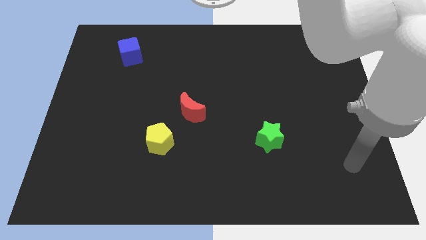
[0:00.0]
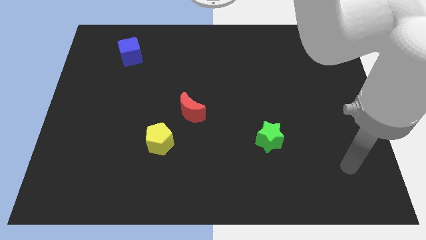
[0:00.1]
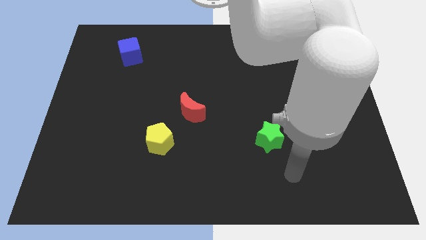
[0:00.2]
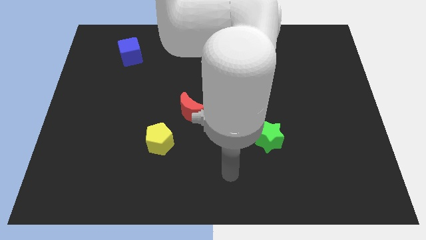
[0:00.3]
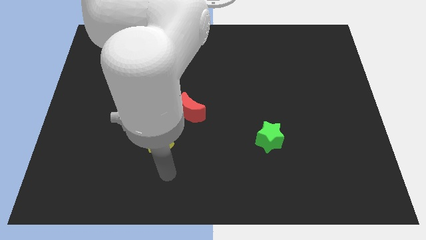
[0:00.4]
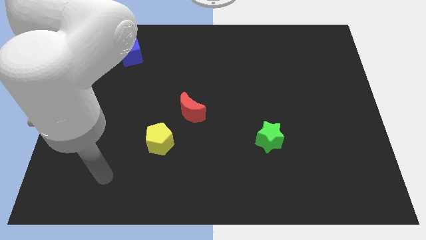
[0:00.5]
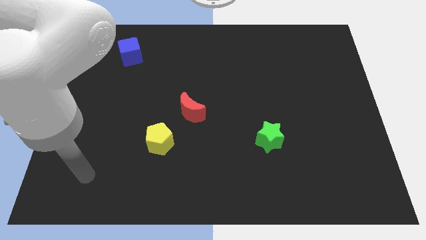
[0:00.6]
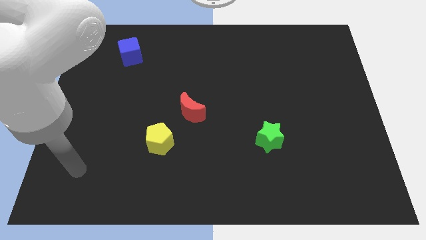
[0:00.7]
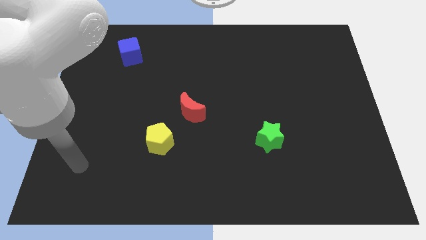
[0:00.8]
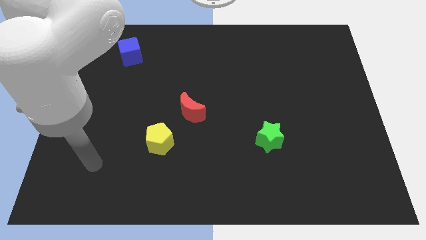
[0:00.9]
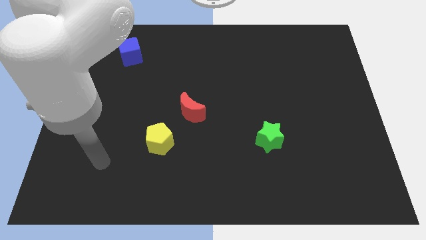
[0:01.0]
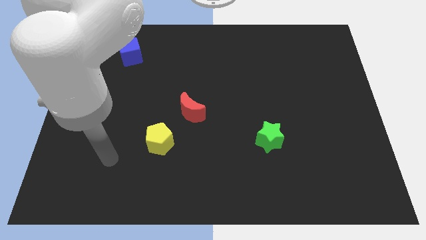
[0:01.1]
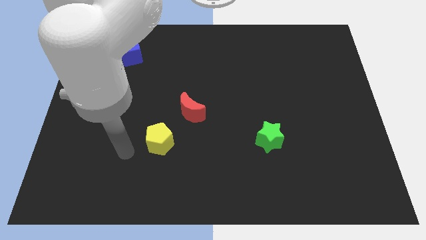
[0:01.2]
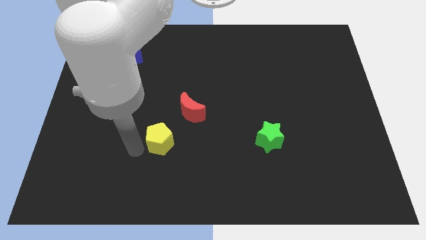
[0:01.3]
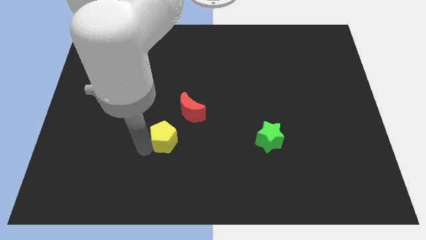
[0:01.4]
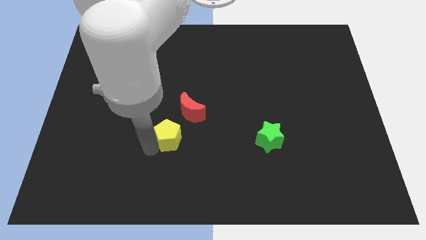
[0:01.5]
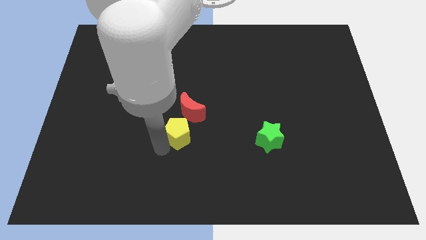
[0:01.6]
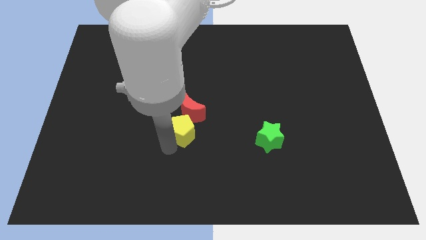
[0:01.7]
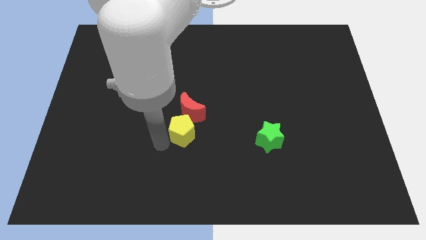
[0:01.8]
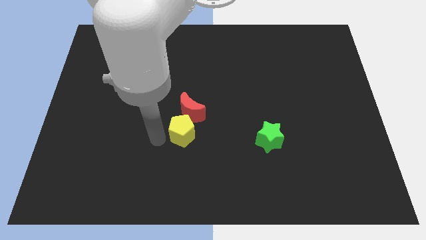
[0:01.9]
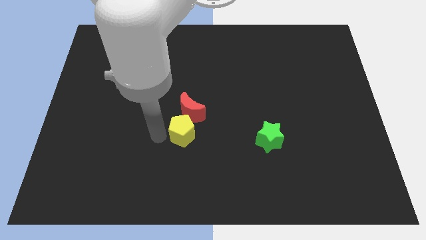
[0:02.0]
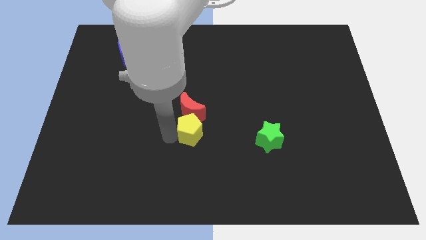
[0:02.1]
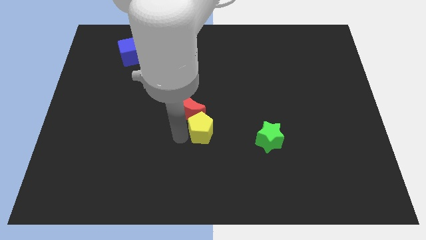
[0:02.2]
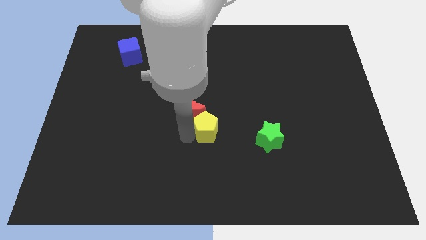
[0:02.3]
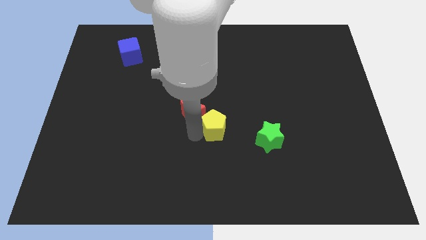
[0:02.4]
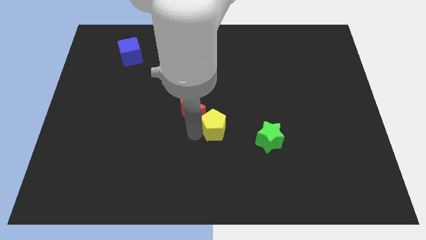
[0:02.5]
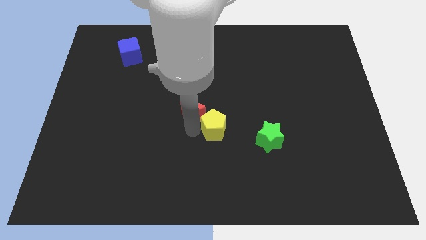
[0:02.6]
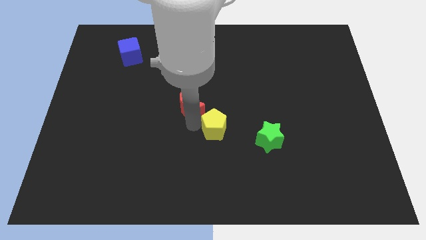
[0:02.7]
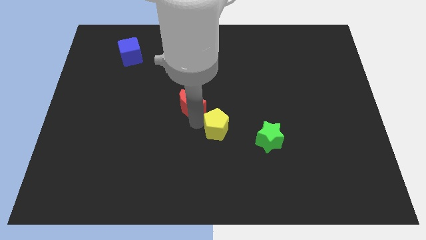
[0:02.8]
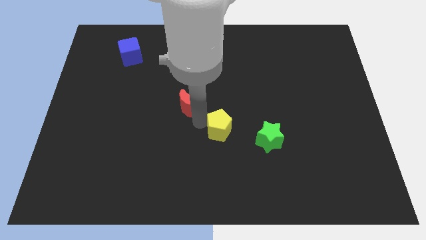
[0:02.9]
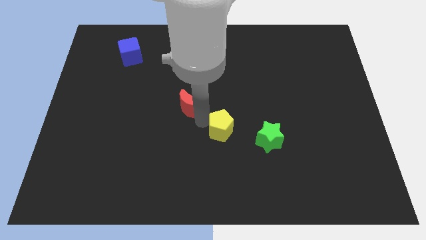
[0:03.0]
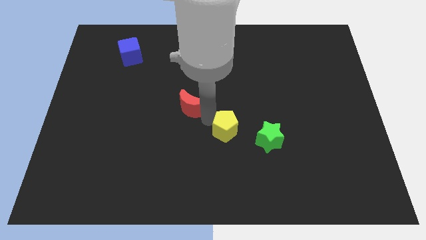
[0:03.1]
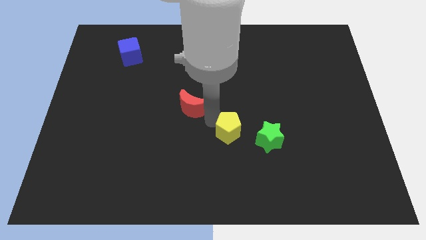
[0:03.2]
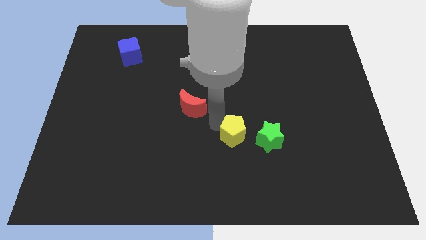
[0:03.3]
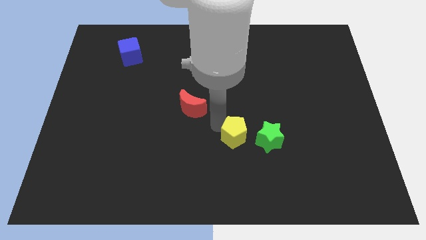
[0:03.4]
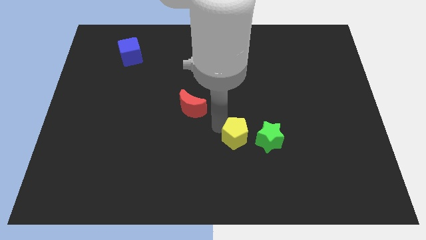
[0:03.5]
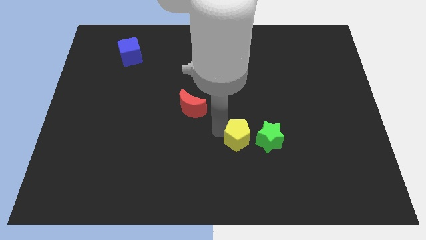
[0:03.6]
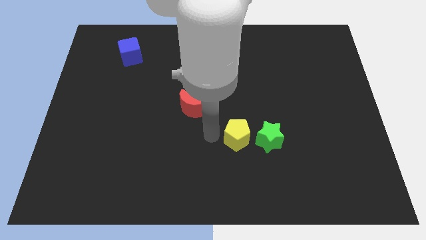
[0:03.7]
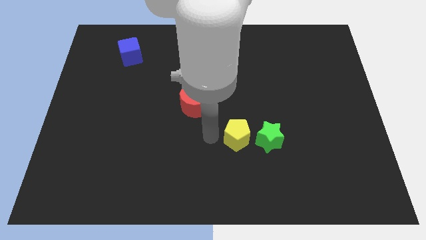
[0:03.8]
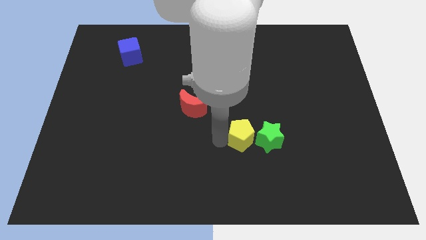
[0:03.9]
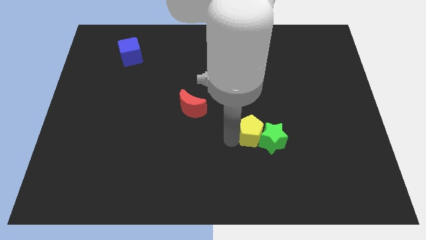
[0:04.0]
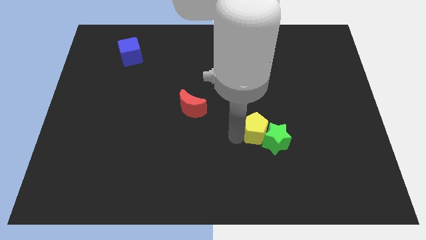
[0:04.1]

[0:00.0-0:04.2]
push the yellow pentagon towards the green block

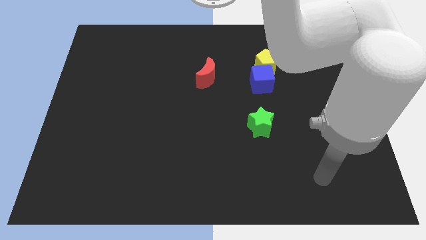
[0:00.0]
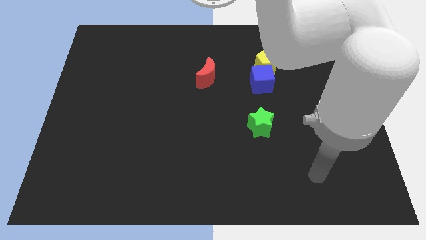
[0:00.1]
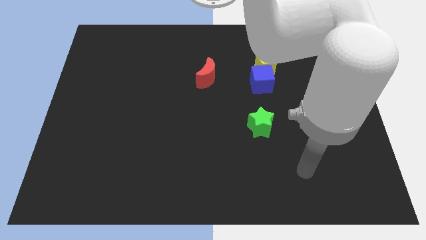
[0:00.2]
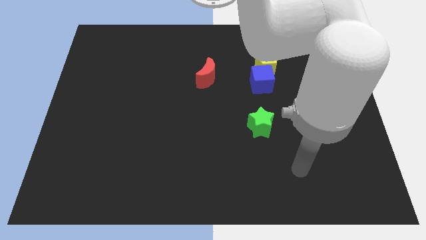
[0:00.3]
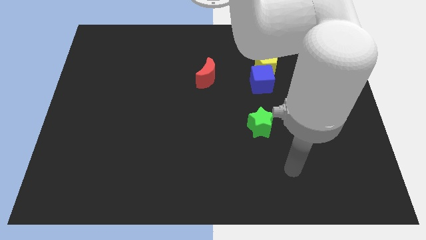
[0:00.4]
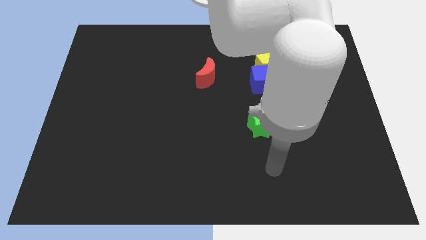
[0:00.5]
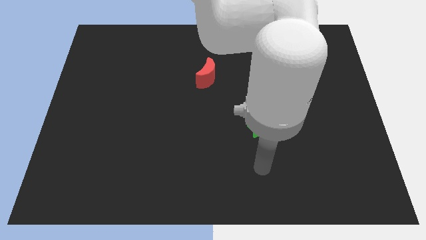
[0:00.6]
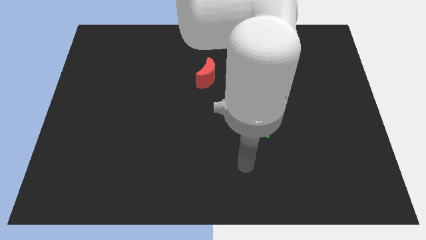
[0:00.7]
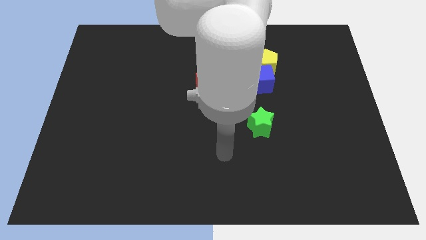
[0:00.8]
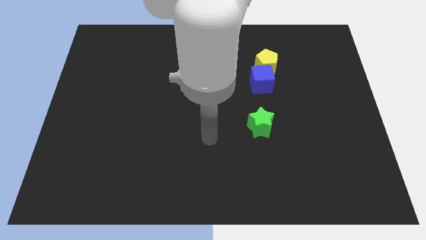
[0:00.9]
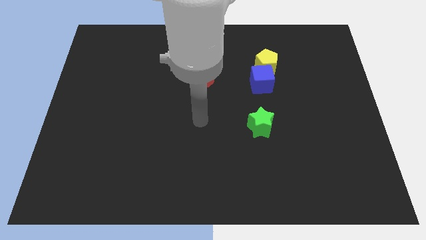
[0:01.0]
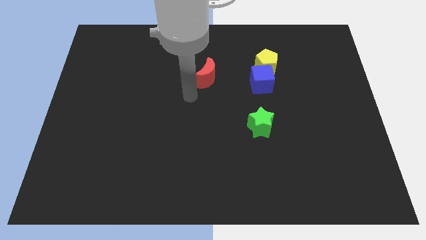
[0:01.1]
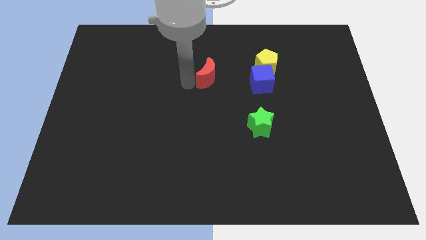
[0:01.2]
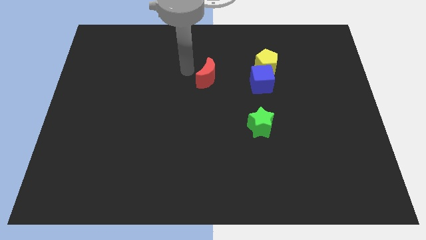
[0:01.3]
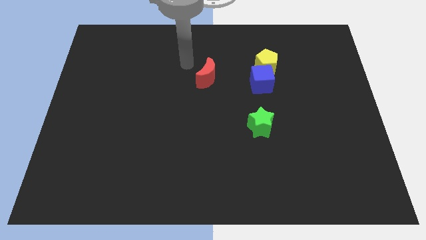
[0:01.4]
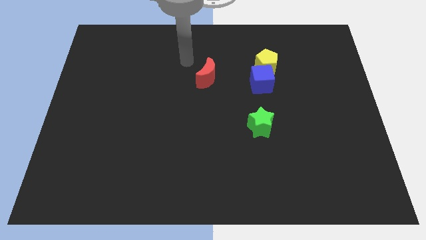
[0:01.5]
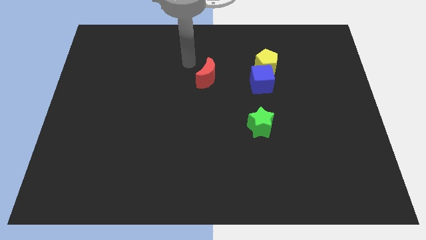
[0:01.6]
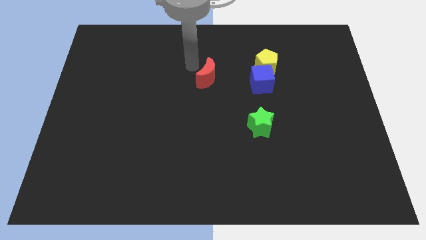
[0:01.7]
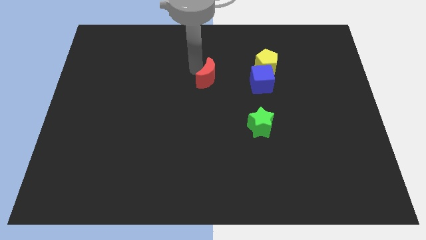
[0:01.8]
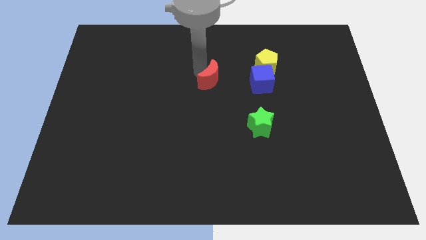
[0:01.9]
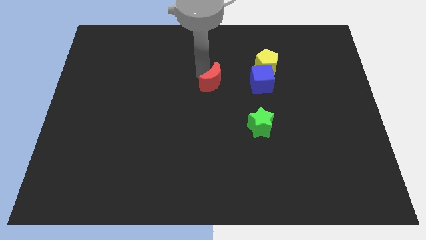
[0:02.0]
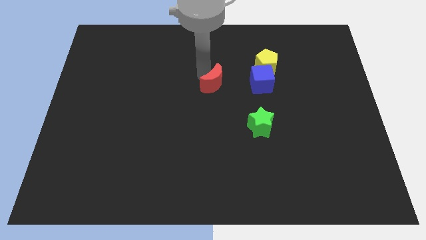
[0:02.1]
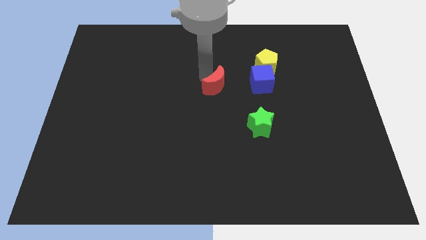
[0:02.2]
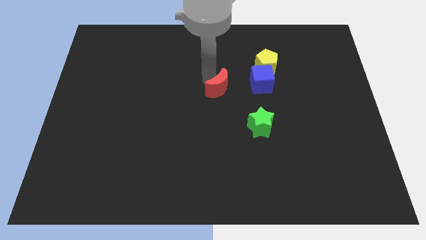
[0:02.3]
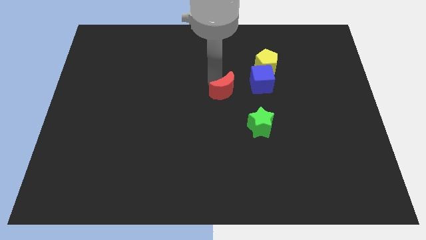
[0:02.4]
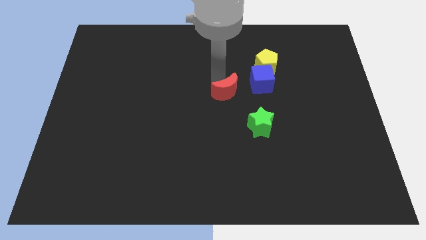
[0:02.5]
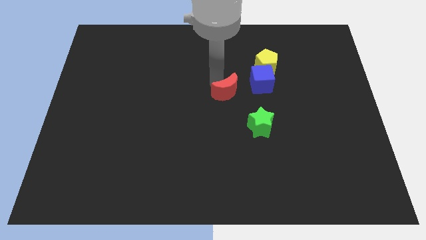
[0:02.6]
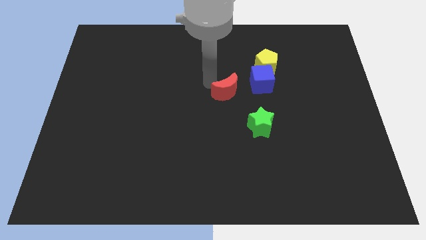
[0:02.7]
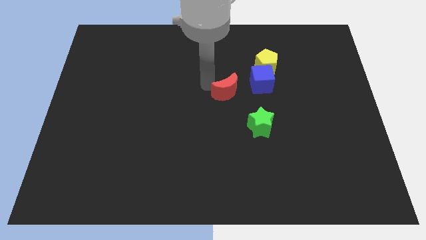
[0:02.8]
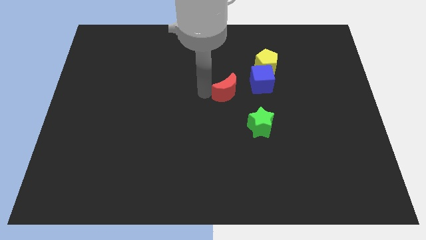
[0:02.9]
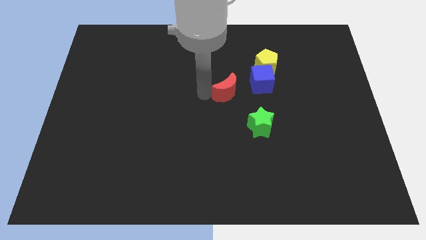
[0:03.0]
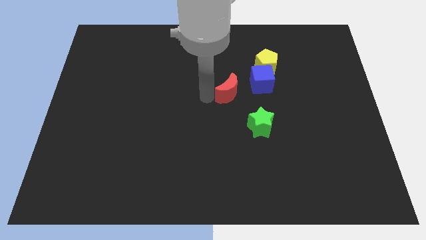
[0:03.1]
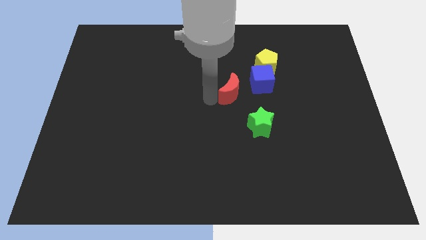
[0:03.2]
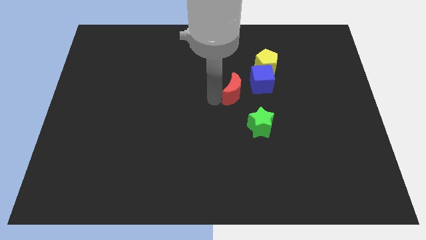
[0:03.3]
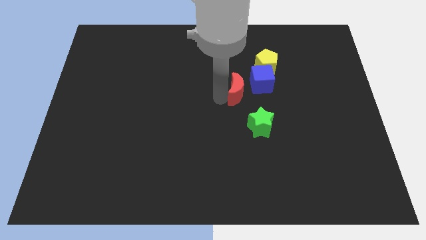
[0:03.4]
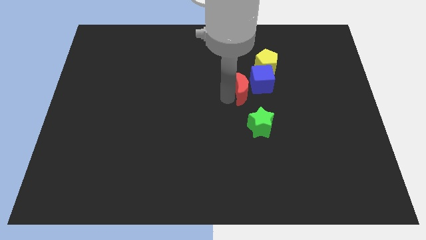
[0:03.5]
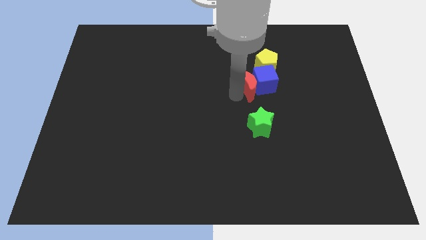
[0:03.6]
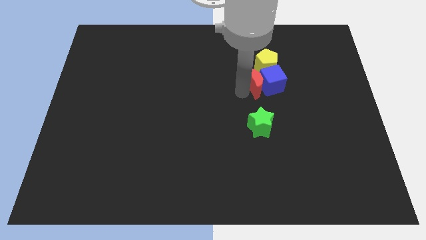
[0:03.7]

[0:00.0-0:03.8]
put the moon towards the blue block

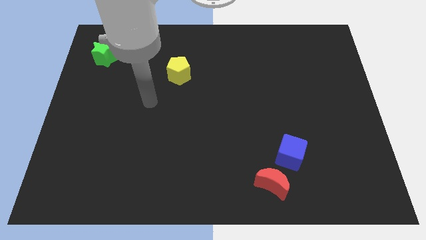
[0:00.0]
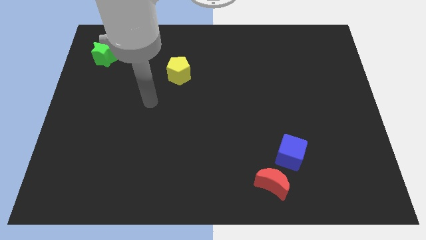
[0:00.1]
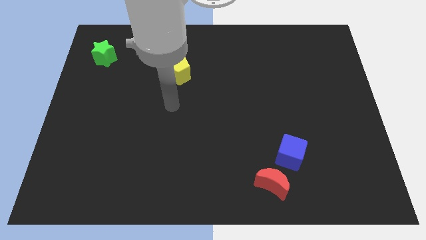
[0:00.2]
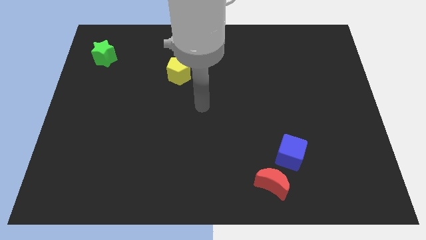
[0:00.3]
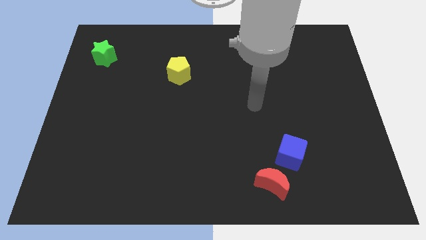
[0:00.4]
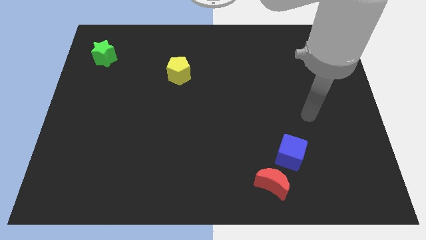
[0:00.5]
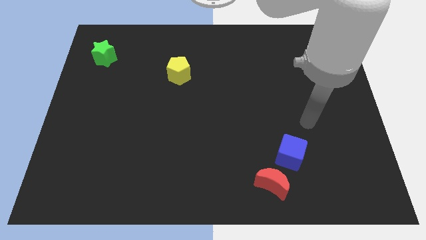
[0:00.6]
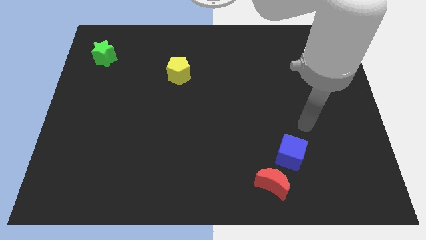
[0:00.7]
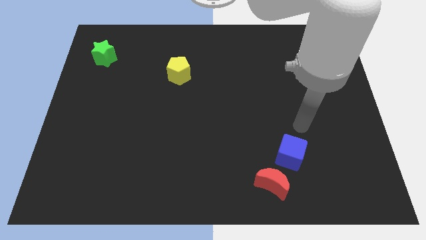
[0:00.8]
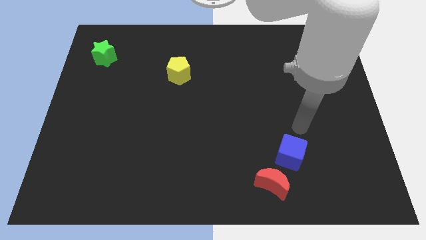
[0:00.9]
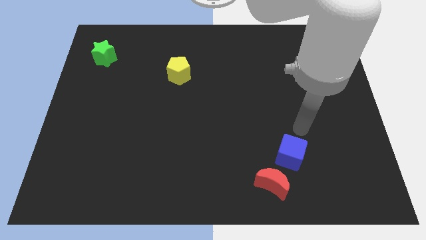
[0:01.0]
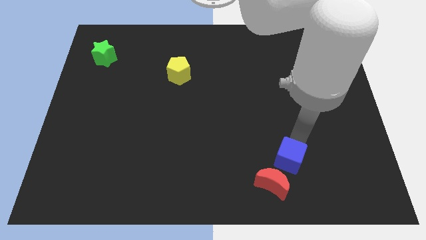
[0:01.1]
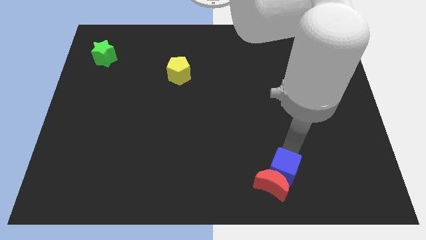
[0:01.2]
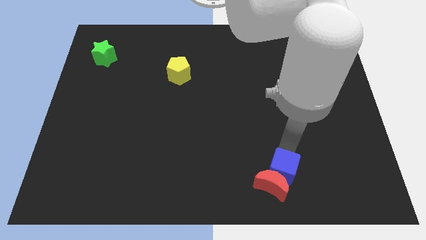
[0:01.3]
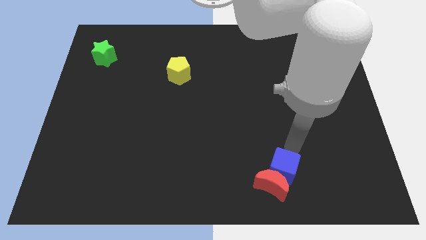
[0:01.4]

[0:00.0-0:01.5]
slide the blue block close to the red moon
